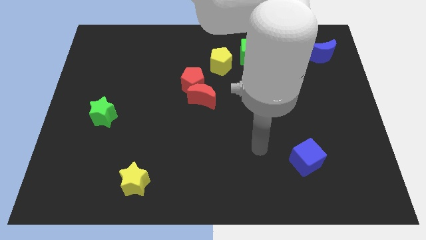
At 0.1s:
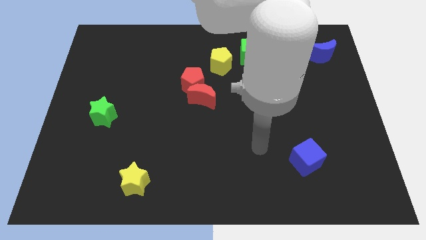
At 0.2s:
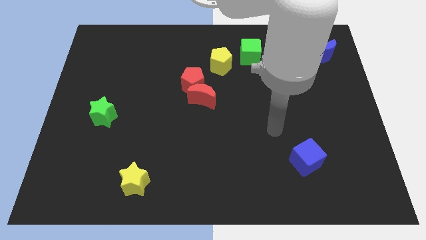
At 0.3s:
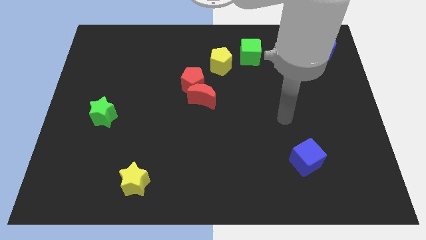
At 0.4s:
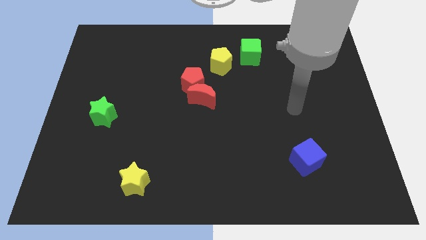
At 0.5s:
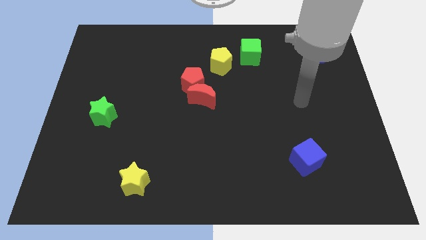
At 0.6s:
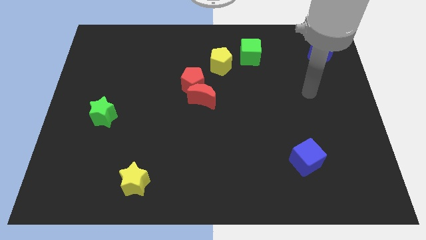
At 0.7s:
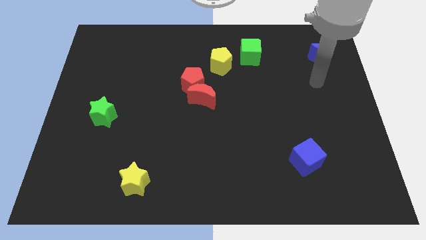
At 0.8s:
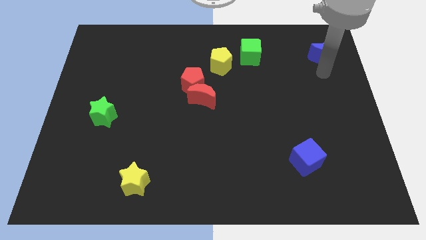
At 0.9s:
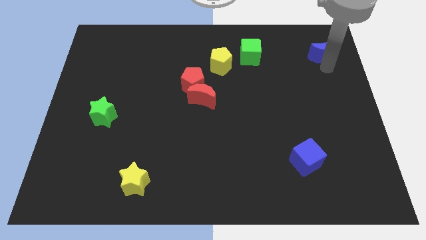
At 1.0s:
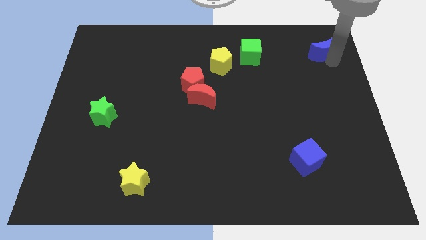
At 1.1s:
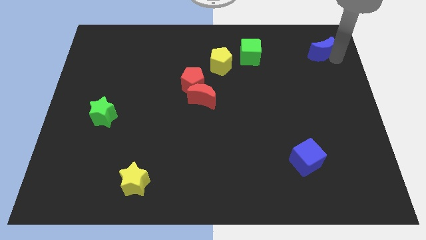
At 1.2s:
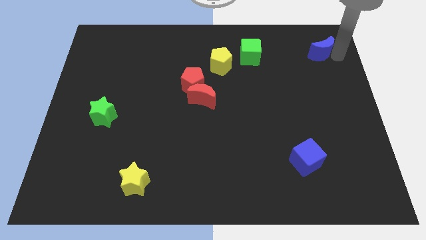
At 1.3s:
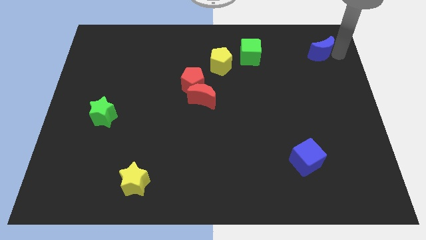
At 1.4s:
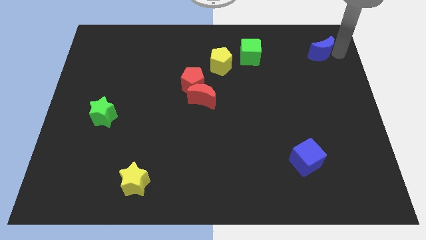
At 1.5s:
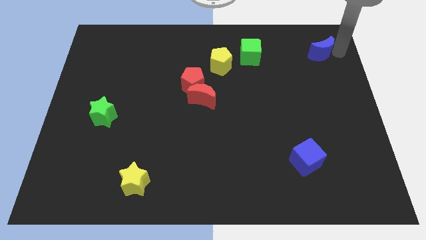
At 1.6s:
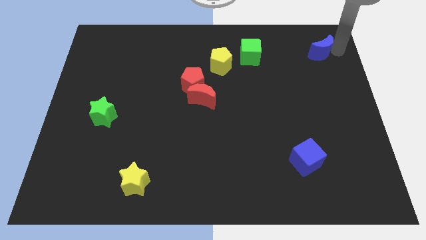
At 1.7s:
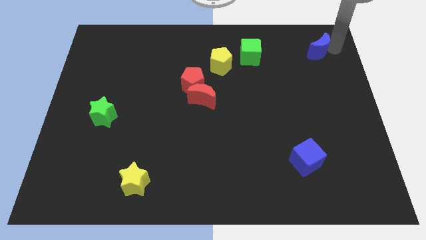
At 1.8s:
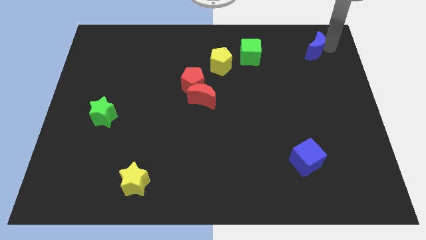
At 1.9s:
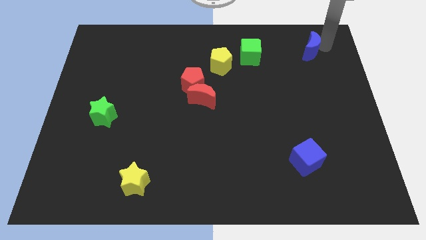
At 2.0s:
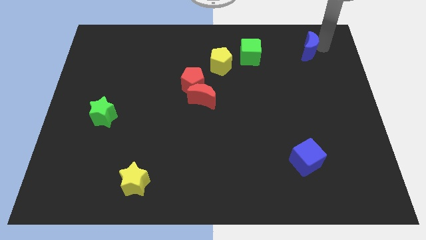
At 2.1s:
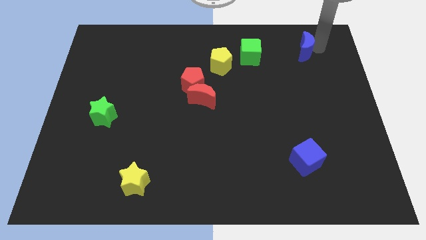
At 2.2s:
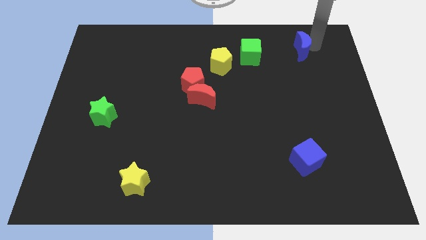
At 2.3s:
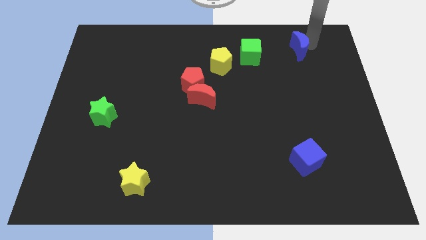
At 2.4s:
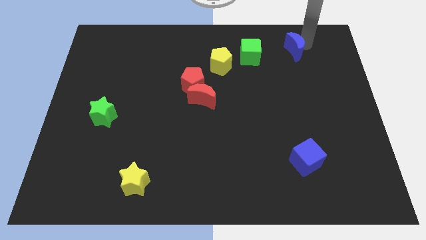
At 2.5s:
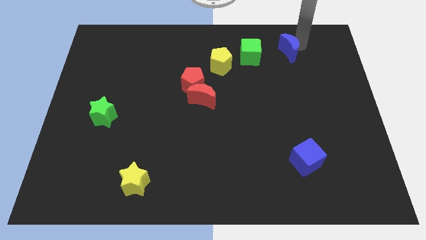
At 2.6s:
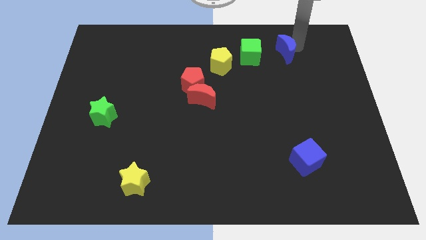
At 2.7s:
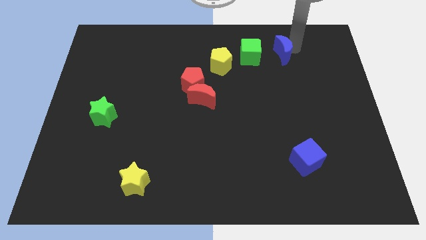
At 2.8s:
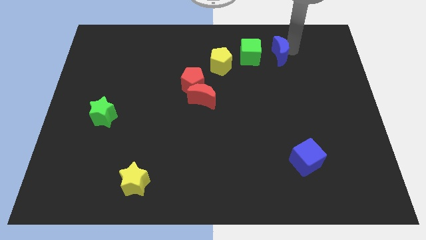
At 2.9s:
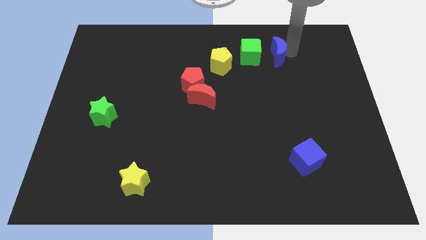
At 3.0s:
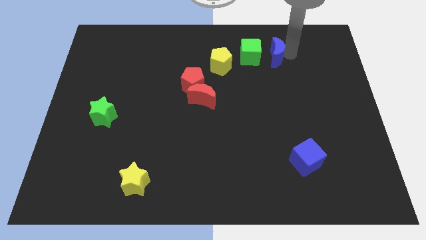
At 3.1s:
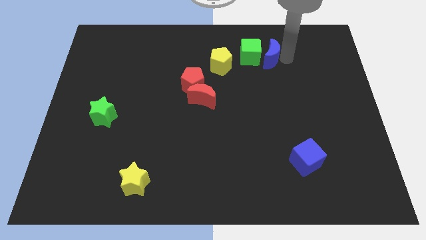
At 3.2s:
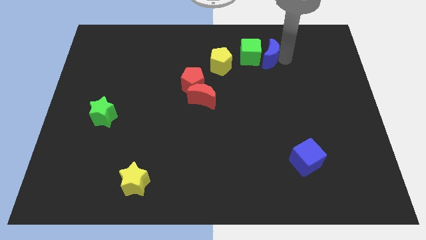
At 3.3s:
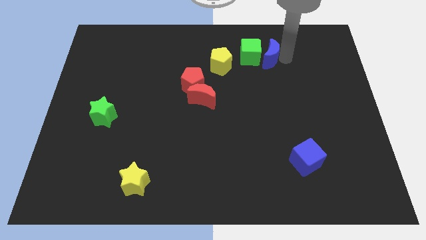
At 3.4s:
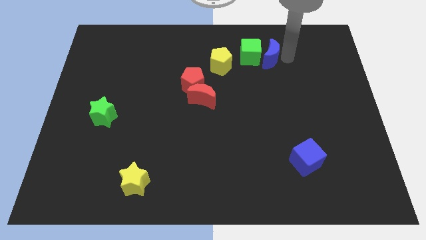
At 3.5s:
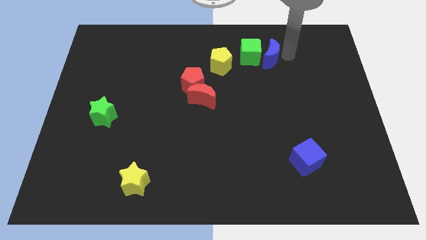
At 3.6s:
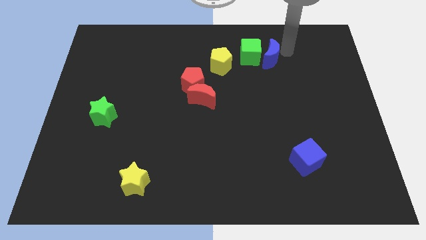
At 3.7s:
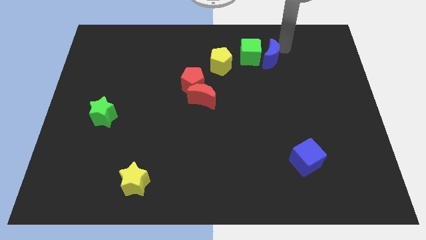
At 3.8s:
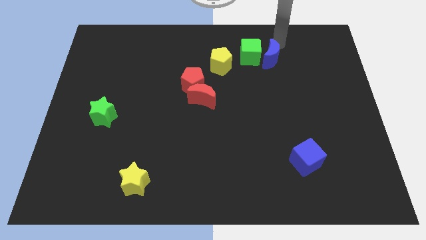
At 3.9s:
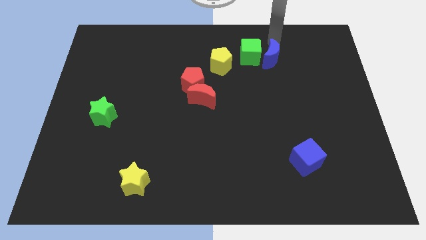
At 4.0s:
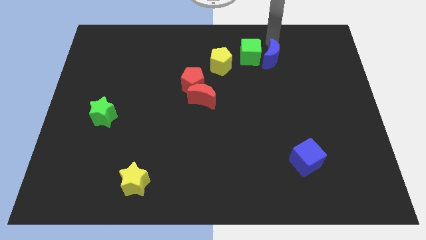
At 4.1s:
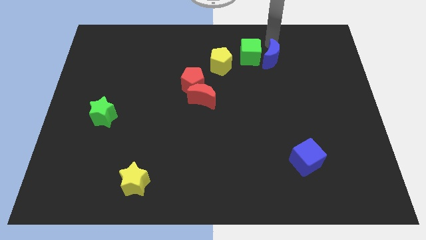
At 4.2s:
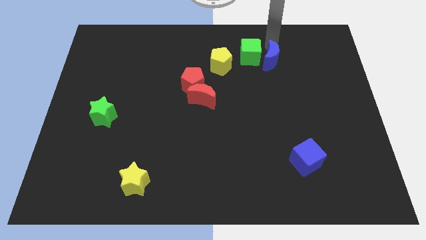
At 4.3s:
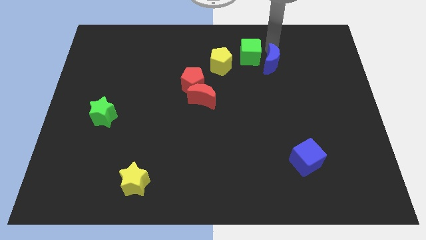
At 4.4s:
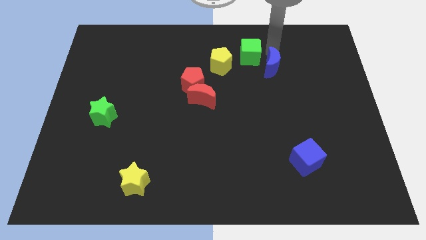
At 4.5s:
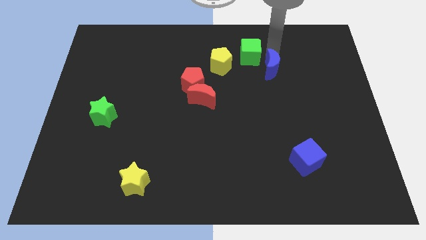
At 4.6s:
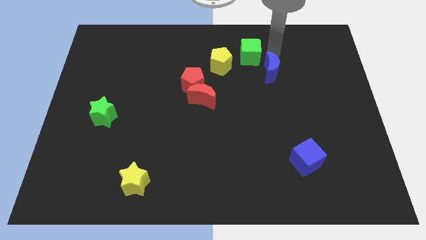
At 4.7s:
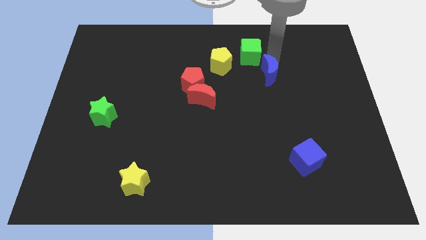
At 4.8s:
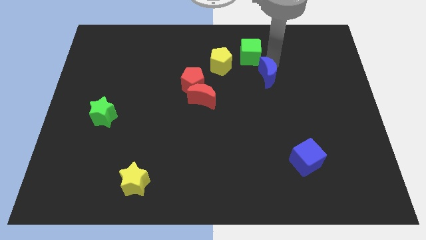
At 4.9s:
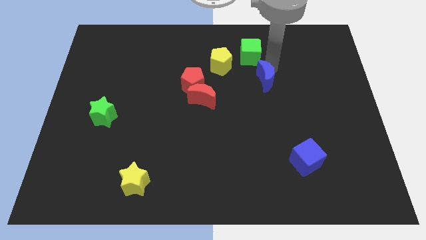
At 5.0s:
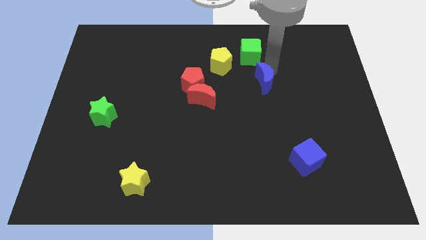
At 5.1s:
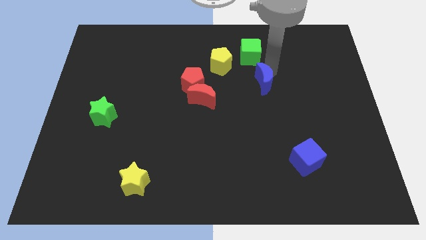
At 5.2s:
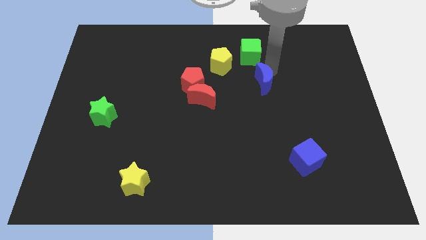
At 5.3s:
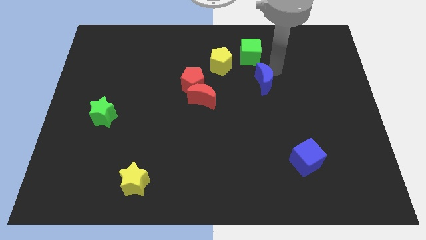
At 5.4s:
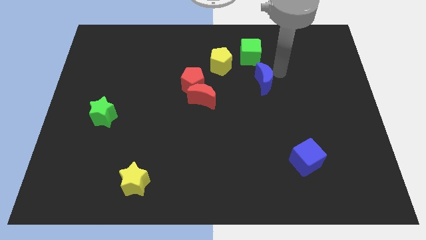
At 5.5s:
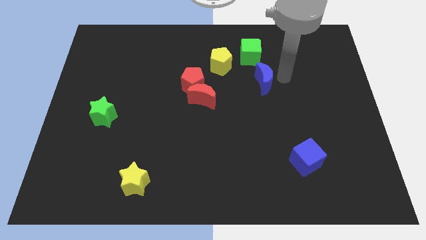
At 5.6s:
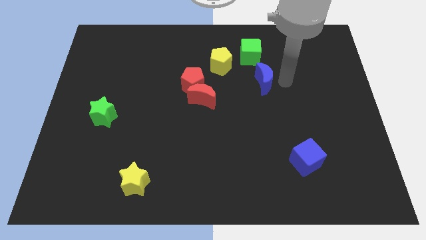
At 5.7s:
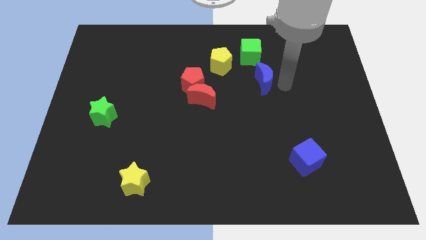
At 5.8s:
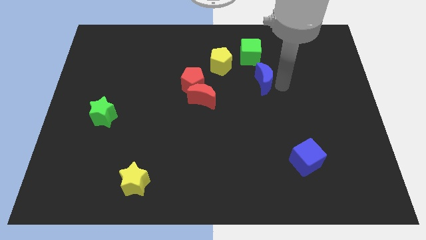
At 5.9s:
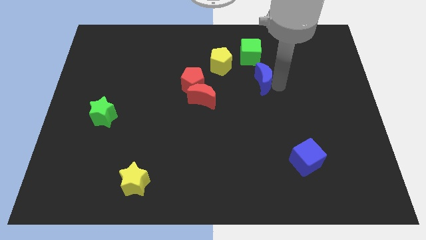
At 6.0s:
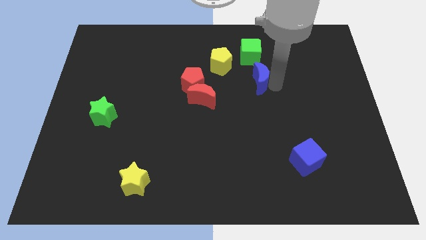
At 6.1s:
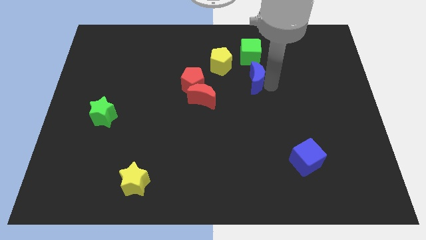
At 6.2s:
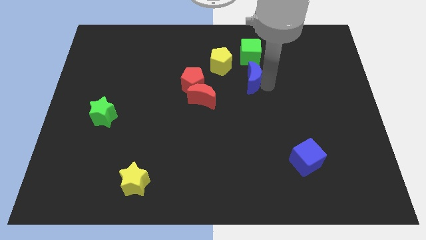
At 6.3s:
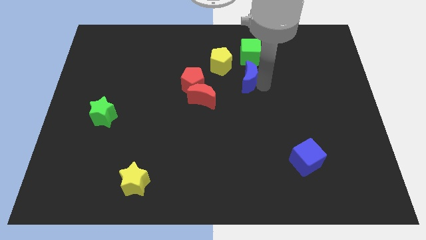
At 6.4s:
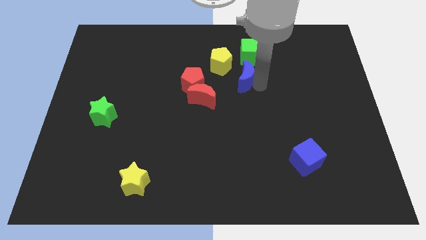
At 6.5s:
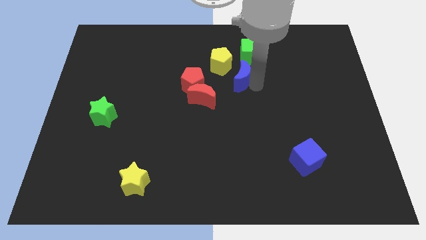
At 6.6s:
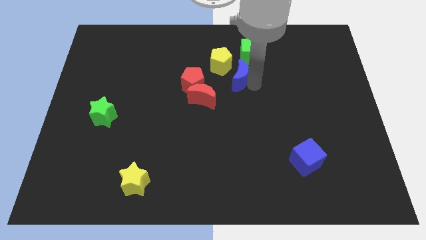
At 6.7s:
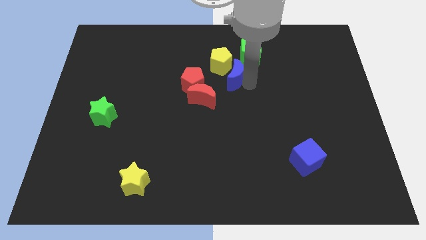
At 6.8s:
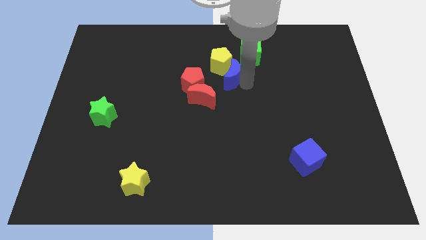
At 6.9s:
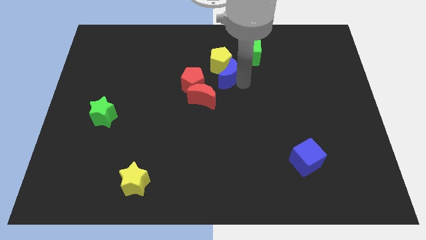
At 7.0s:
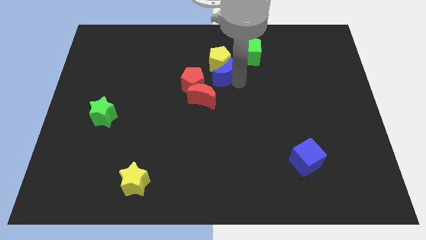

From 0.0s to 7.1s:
slide the blue moon to the yellow pentagon

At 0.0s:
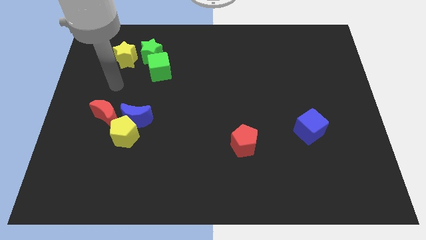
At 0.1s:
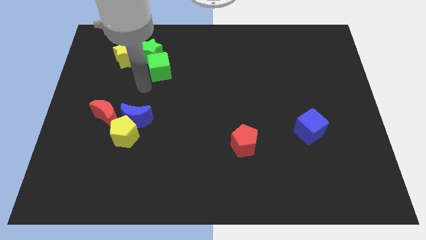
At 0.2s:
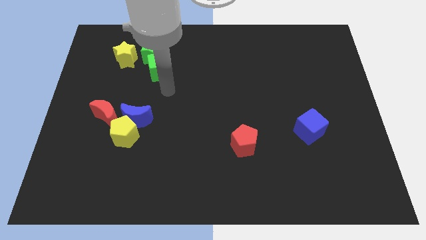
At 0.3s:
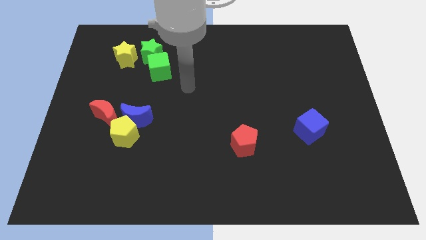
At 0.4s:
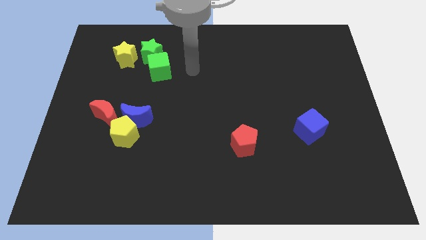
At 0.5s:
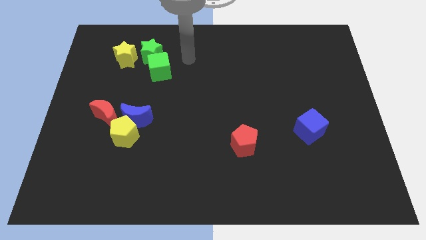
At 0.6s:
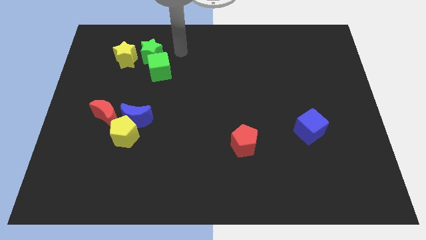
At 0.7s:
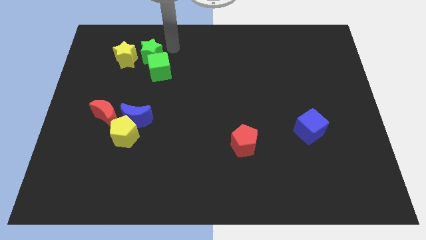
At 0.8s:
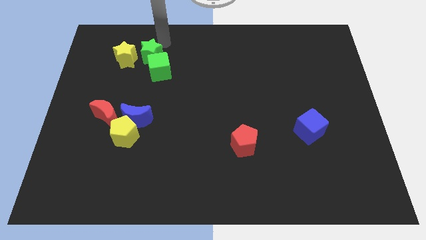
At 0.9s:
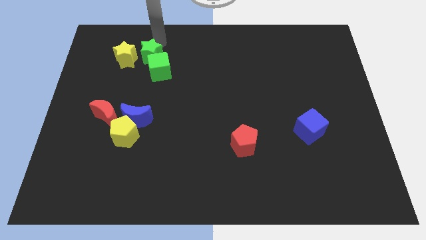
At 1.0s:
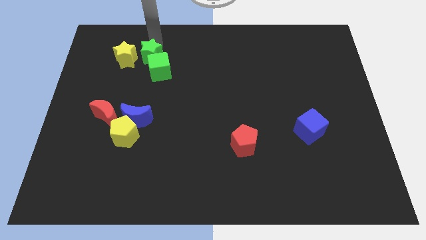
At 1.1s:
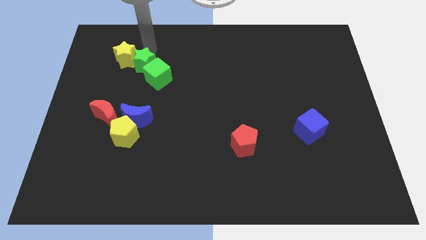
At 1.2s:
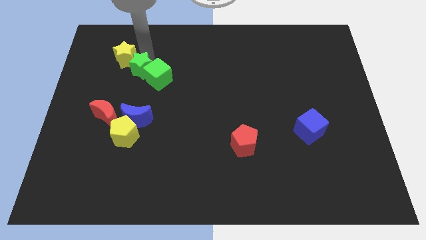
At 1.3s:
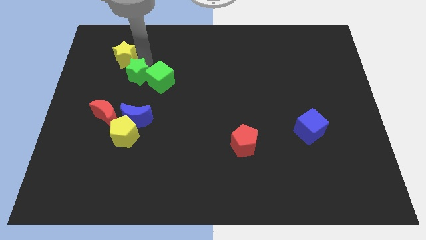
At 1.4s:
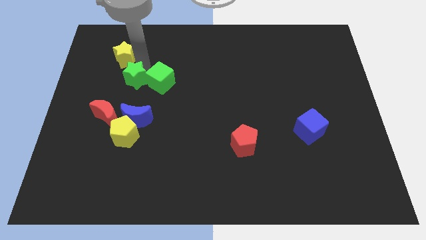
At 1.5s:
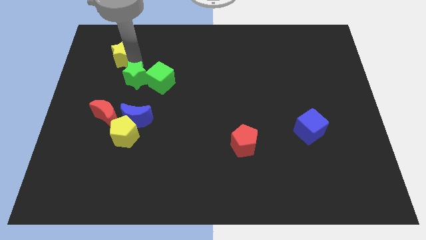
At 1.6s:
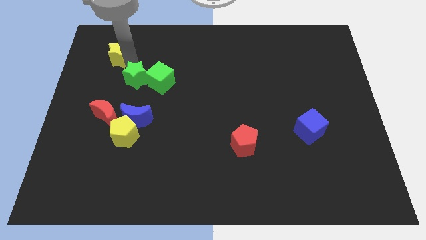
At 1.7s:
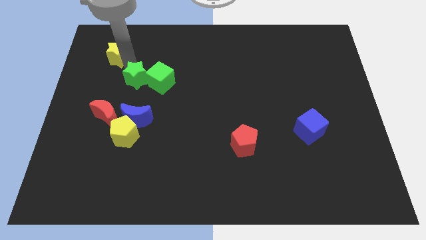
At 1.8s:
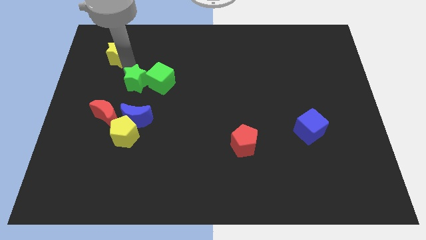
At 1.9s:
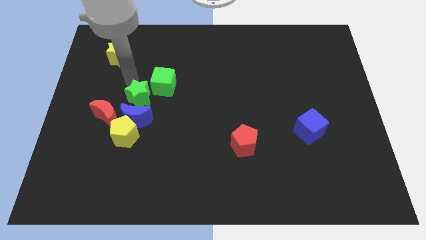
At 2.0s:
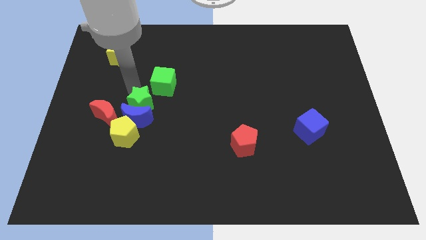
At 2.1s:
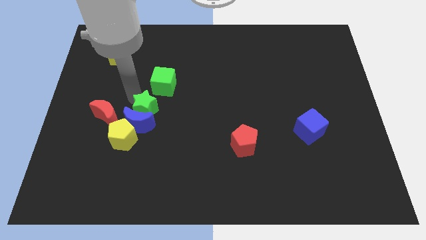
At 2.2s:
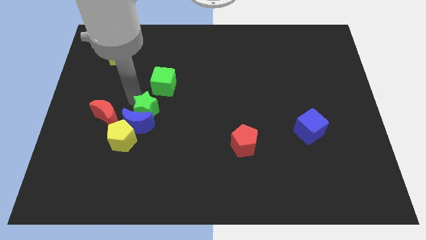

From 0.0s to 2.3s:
put the green star to the blue moon
